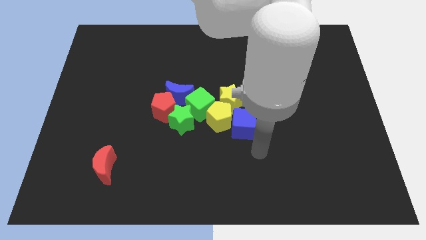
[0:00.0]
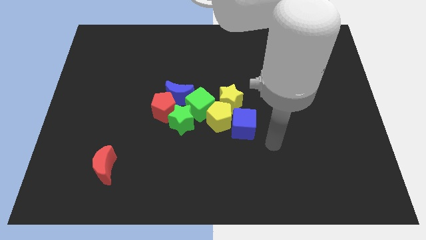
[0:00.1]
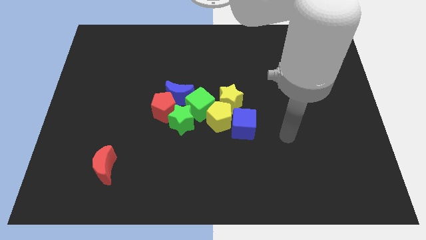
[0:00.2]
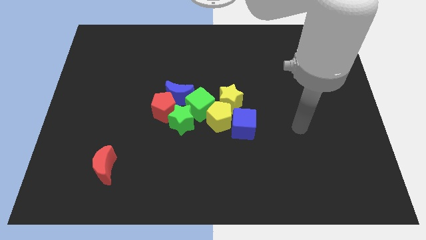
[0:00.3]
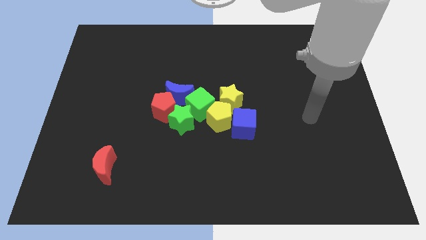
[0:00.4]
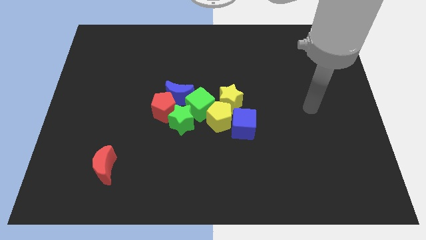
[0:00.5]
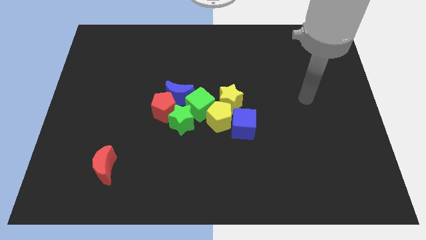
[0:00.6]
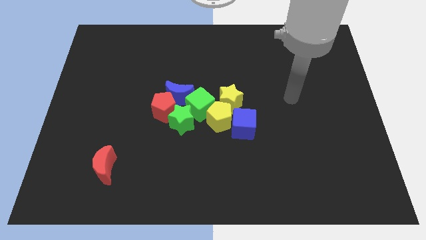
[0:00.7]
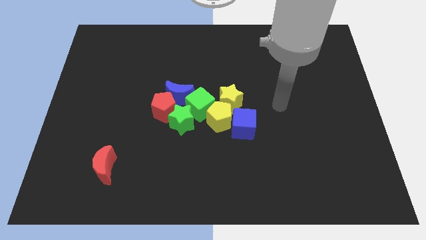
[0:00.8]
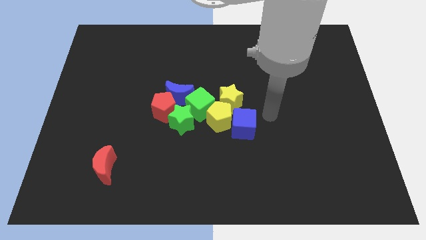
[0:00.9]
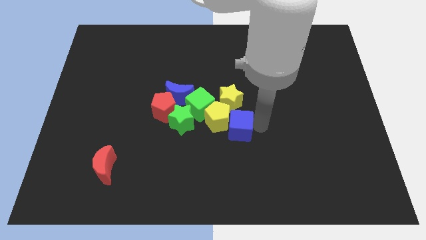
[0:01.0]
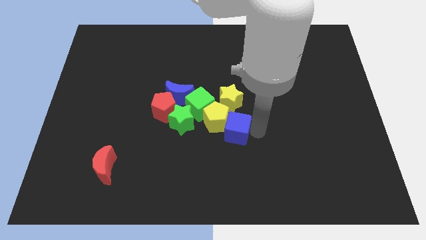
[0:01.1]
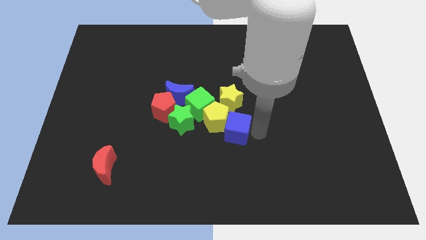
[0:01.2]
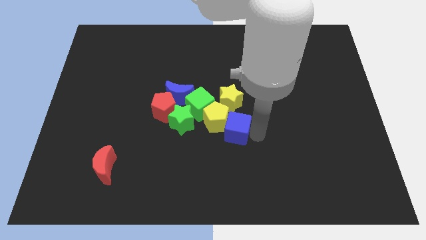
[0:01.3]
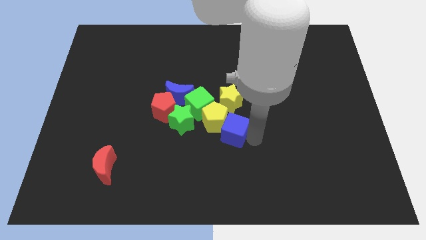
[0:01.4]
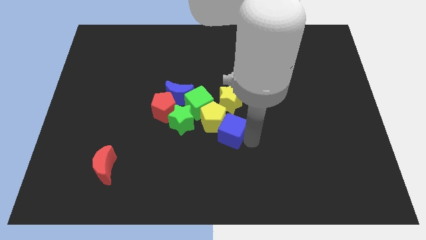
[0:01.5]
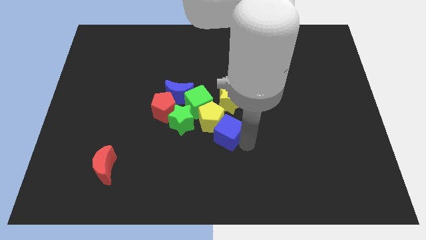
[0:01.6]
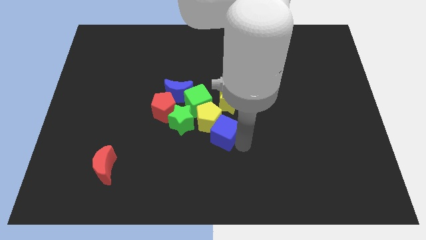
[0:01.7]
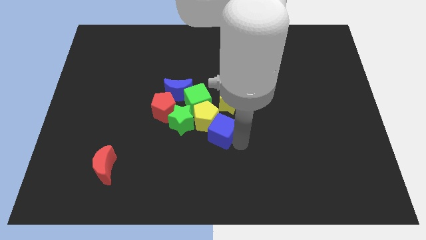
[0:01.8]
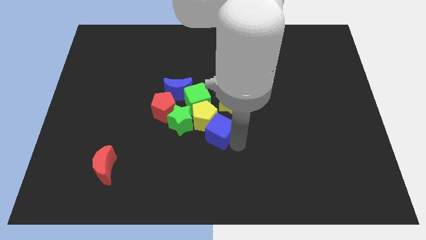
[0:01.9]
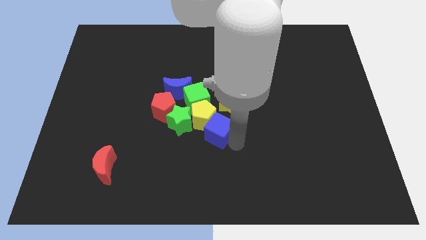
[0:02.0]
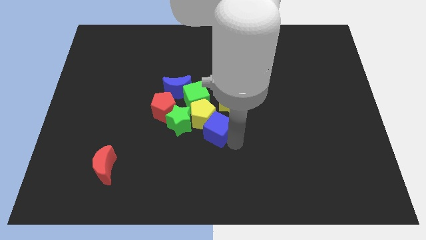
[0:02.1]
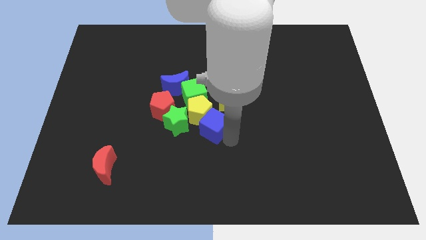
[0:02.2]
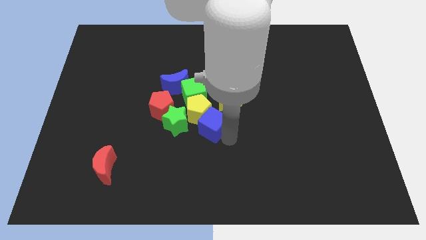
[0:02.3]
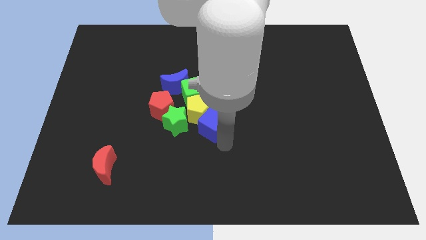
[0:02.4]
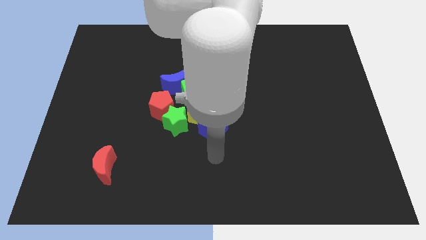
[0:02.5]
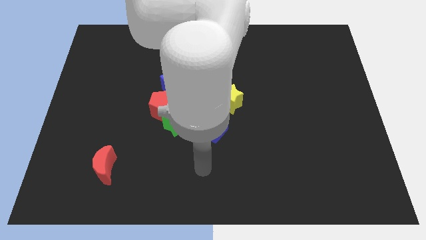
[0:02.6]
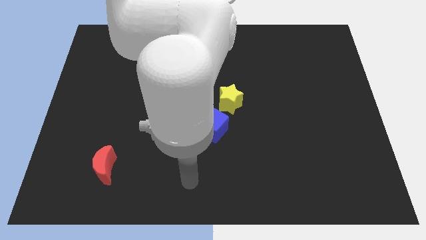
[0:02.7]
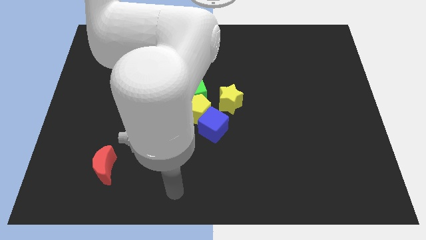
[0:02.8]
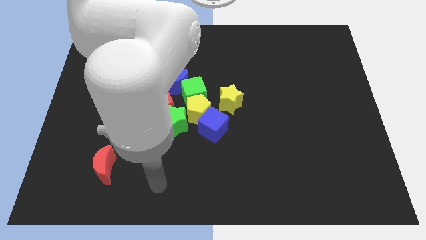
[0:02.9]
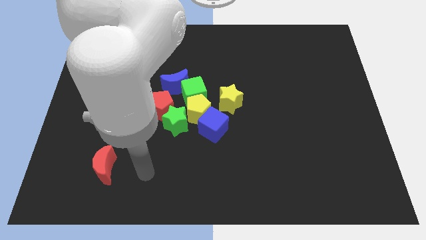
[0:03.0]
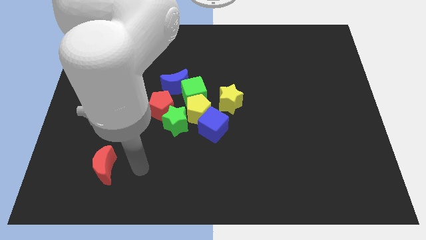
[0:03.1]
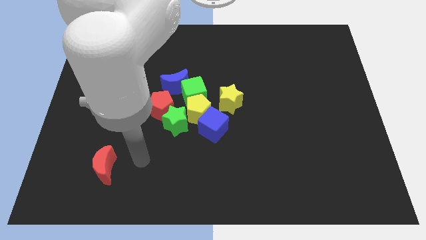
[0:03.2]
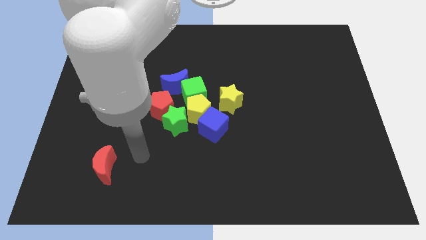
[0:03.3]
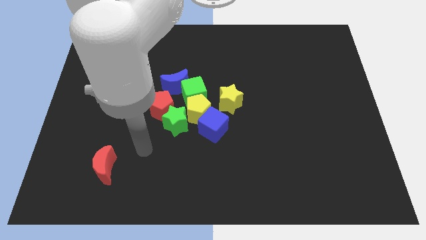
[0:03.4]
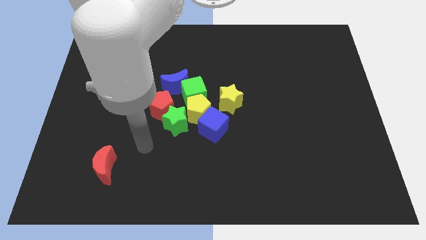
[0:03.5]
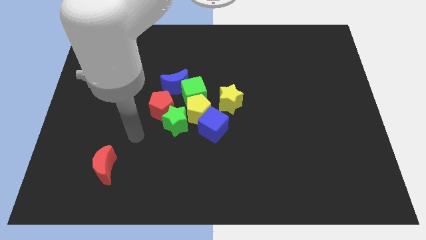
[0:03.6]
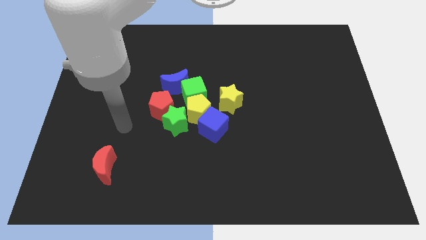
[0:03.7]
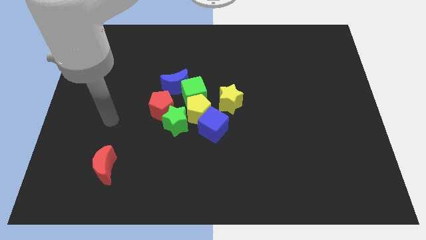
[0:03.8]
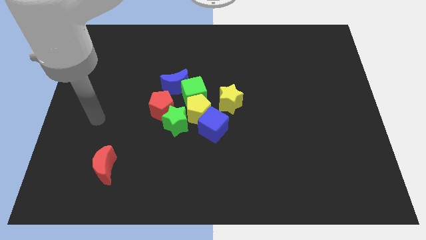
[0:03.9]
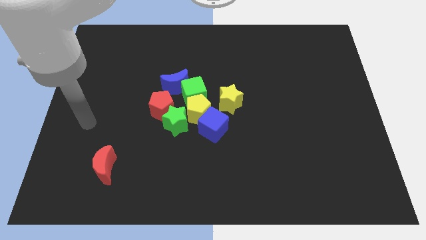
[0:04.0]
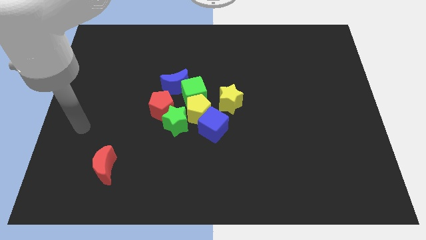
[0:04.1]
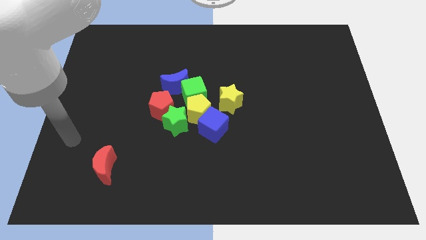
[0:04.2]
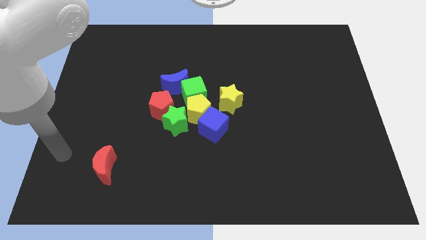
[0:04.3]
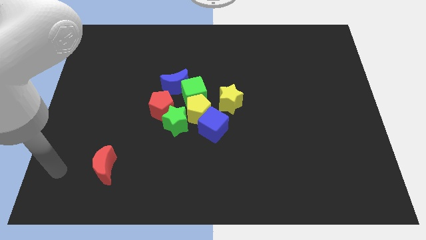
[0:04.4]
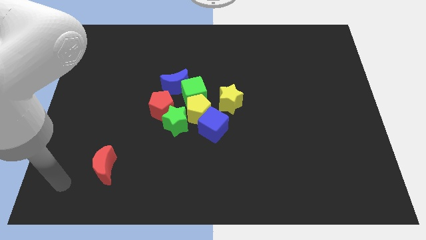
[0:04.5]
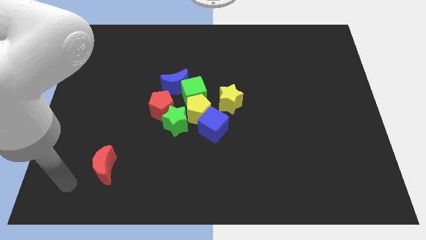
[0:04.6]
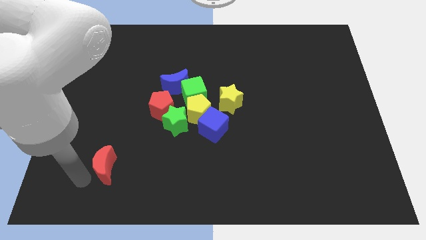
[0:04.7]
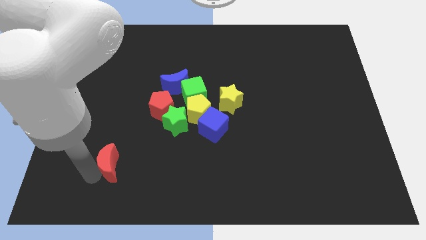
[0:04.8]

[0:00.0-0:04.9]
move your arm to the red moon

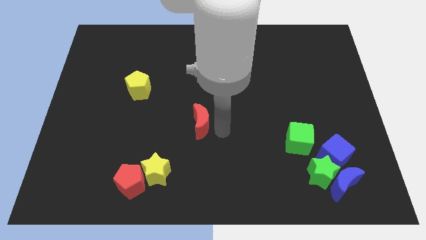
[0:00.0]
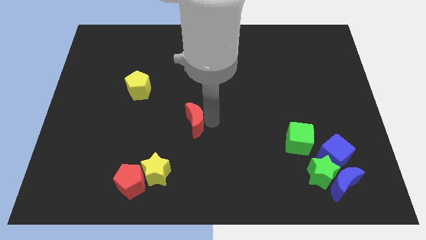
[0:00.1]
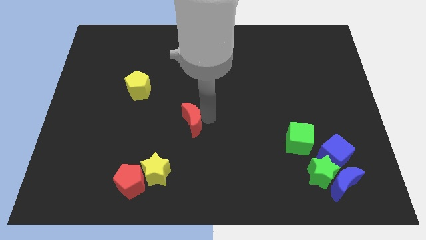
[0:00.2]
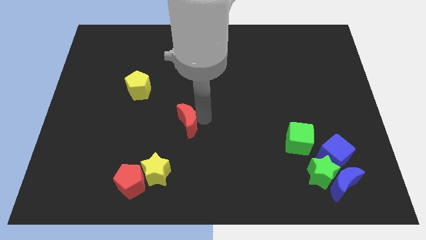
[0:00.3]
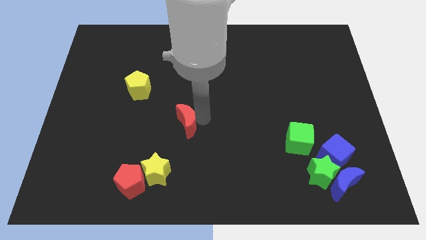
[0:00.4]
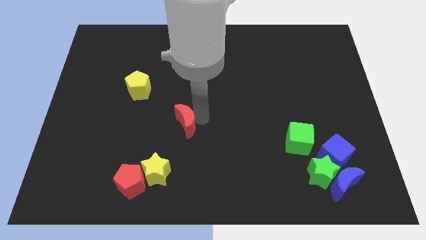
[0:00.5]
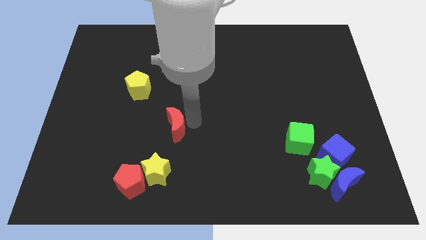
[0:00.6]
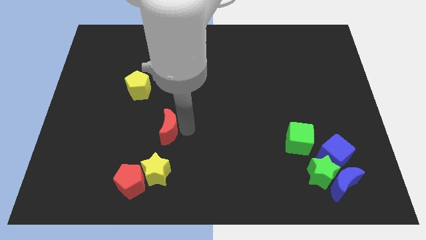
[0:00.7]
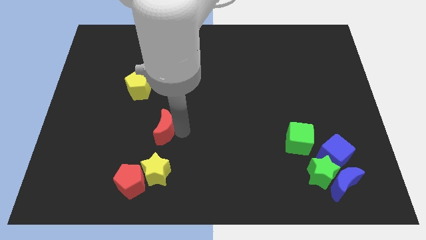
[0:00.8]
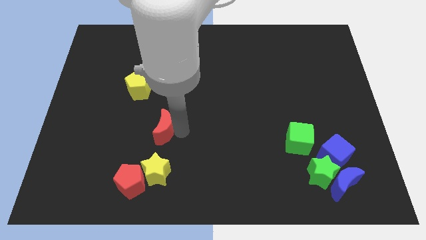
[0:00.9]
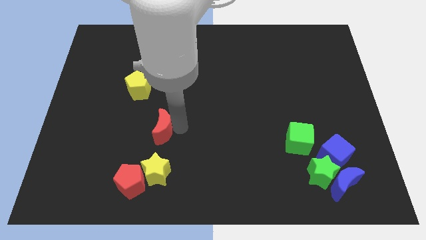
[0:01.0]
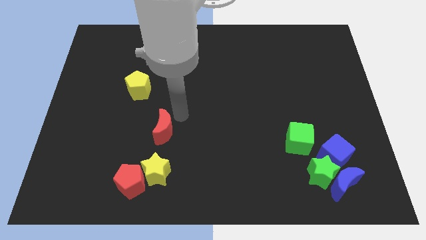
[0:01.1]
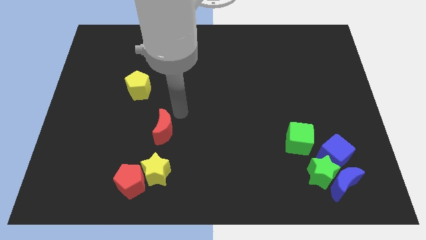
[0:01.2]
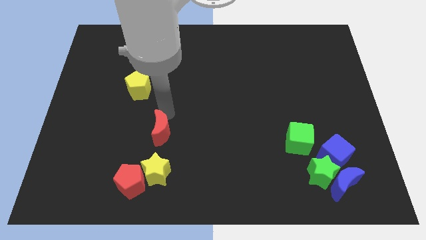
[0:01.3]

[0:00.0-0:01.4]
place the red crescent close to the yellow star

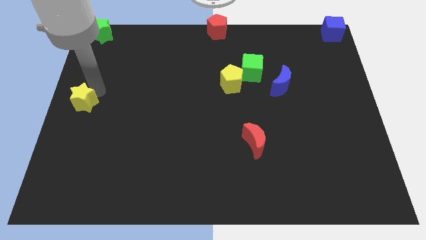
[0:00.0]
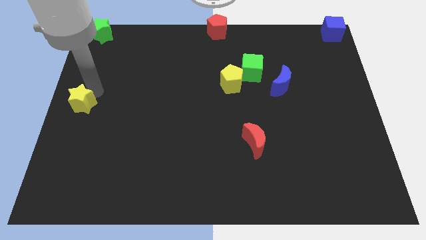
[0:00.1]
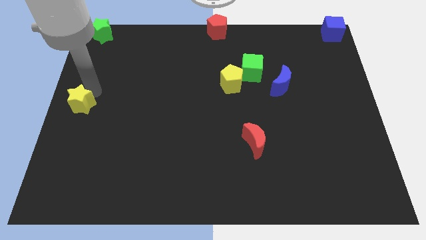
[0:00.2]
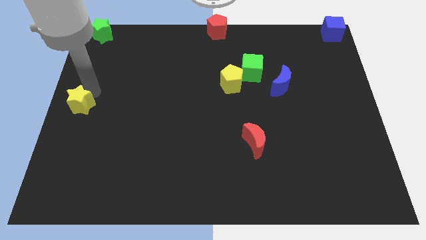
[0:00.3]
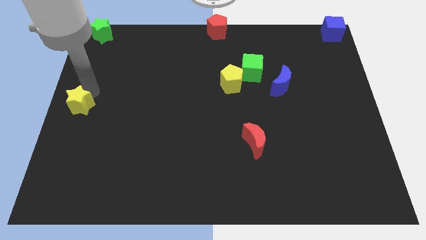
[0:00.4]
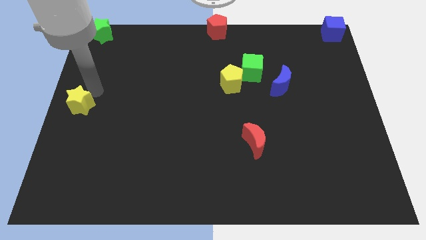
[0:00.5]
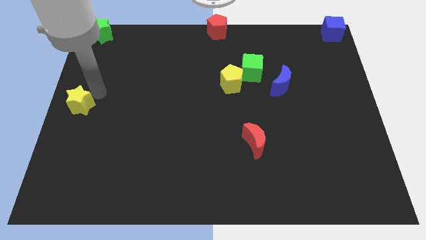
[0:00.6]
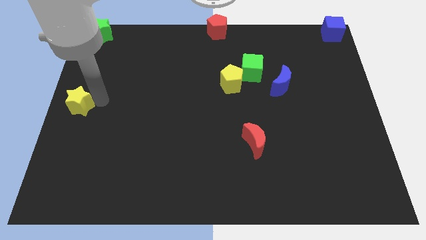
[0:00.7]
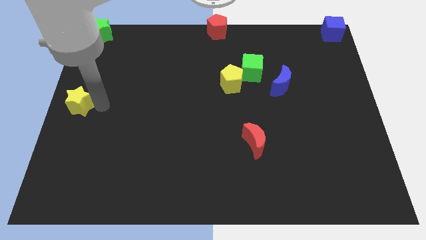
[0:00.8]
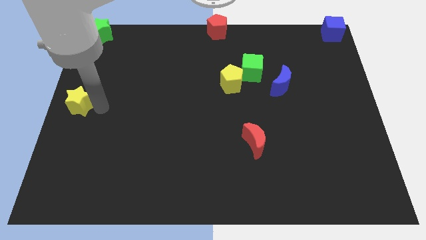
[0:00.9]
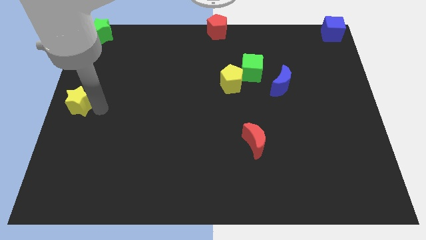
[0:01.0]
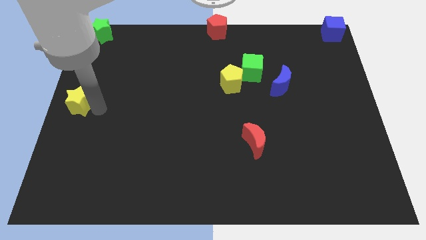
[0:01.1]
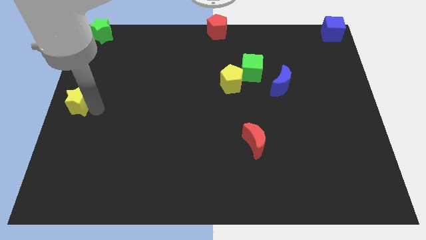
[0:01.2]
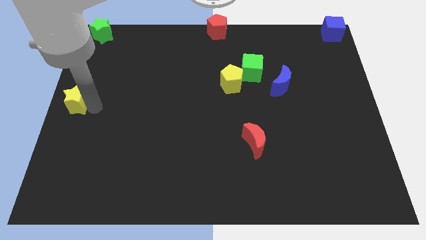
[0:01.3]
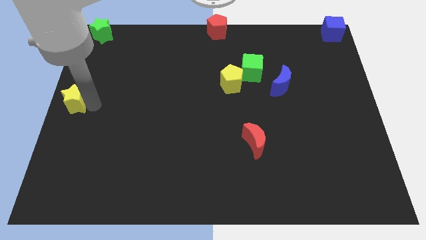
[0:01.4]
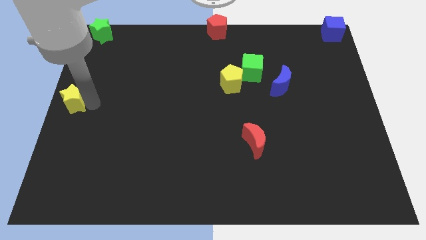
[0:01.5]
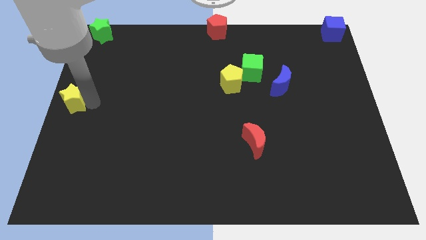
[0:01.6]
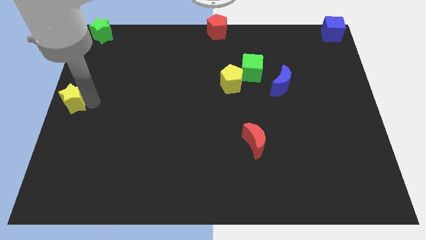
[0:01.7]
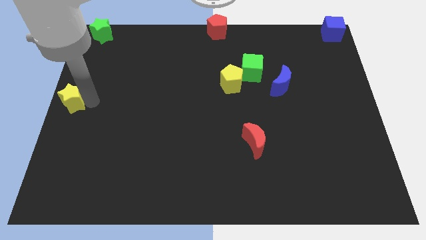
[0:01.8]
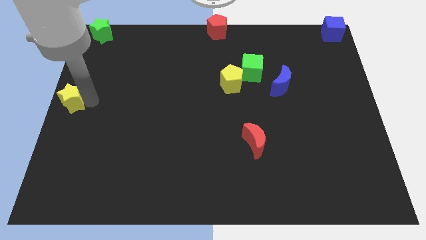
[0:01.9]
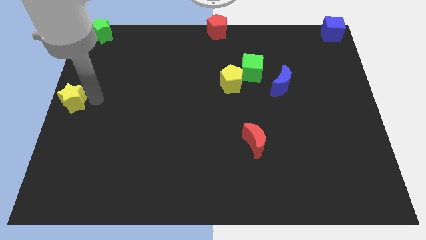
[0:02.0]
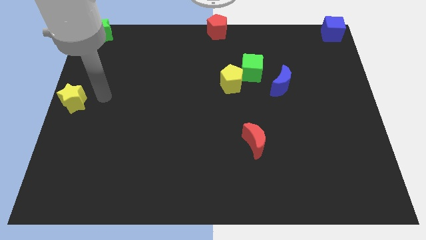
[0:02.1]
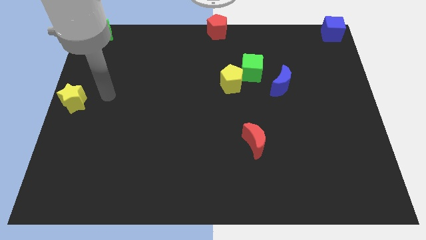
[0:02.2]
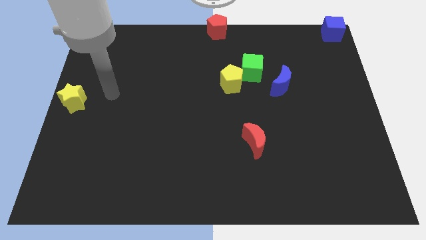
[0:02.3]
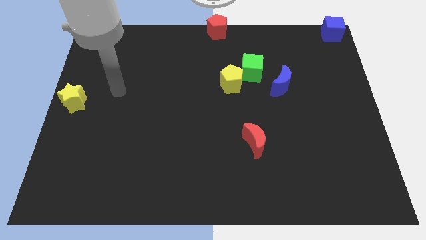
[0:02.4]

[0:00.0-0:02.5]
push the yellow star to the center left of the board
